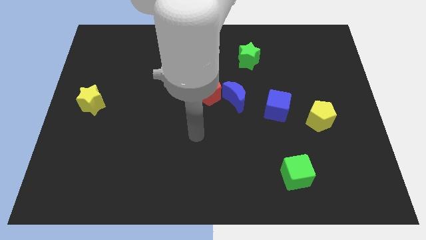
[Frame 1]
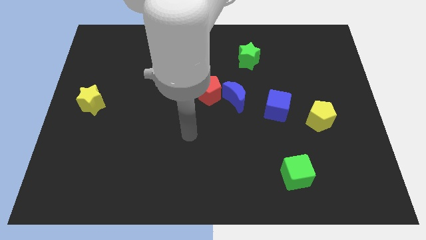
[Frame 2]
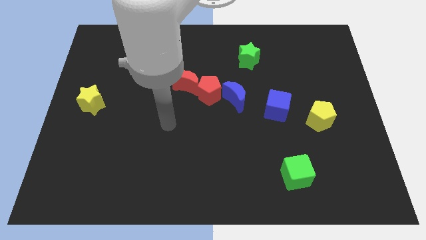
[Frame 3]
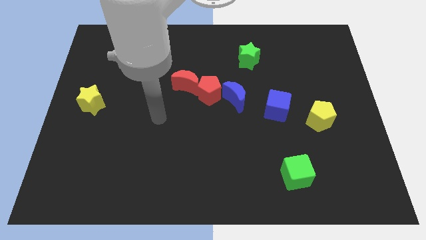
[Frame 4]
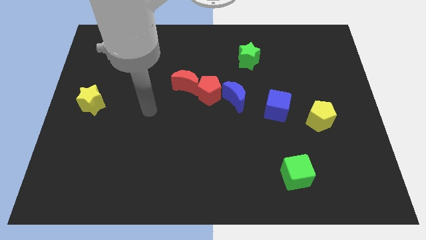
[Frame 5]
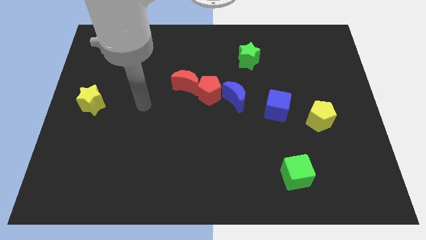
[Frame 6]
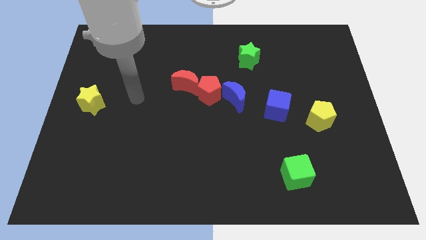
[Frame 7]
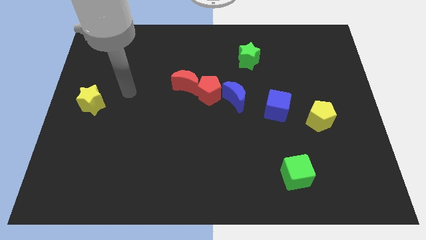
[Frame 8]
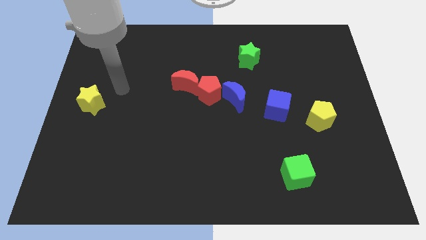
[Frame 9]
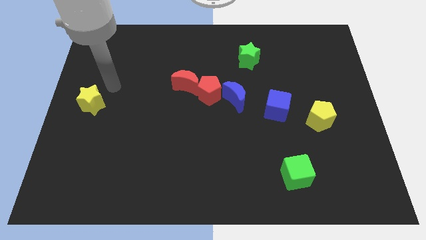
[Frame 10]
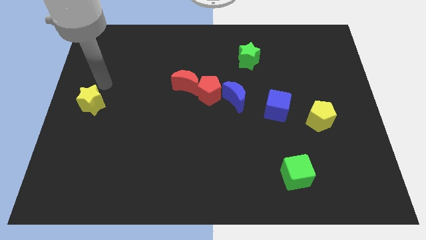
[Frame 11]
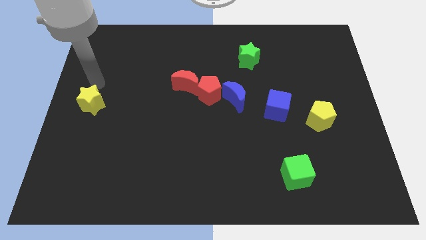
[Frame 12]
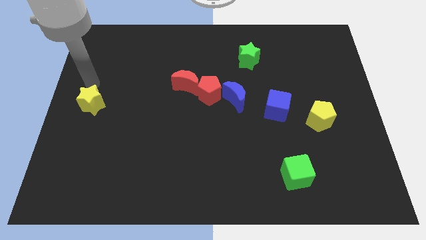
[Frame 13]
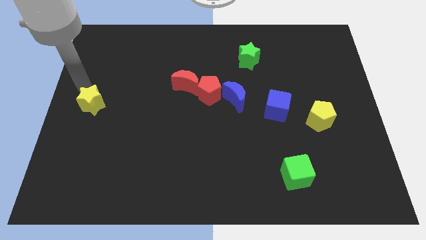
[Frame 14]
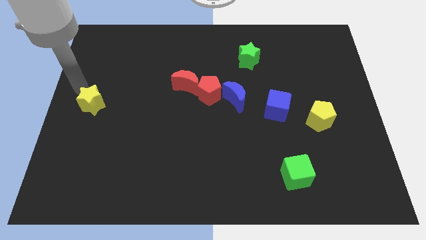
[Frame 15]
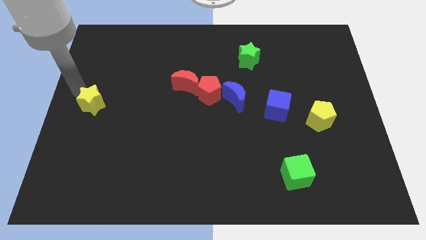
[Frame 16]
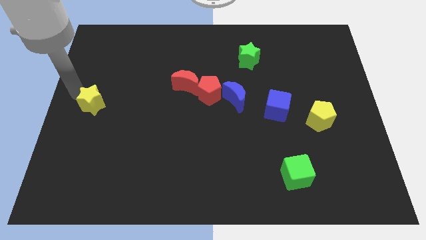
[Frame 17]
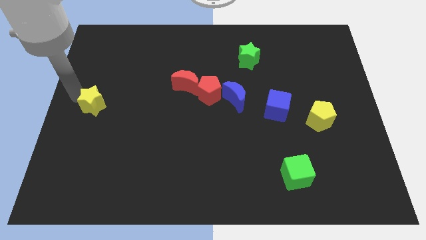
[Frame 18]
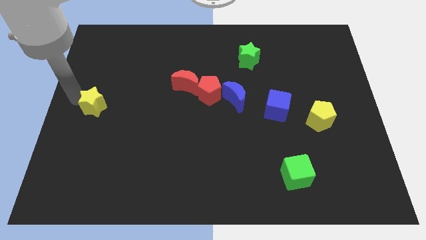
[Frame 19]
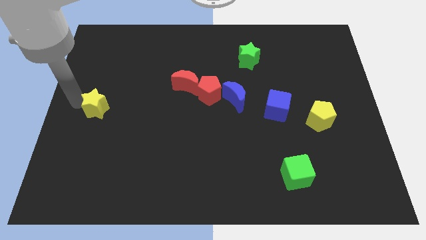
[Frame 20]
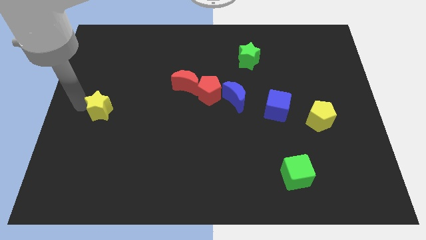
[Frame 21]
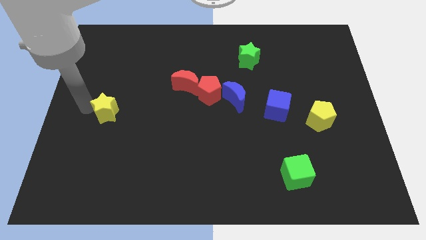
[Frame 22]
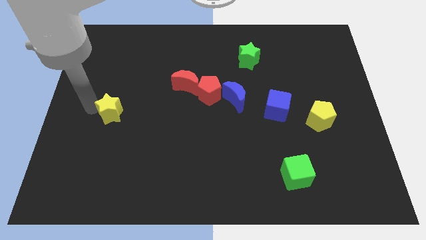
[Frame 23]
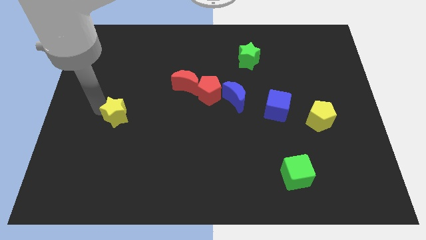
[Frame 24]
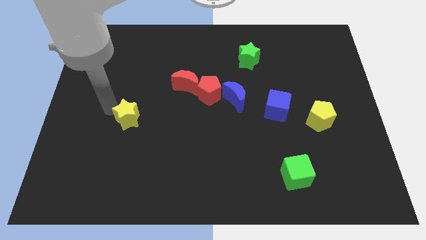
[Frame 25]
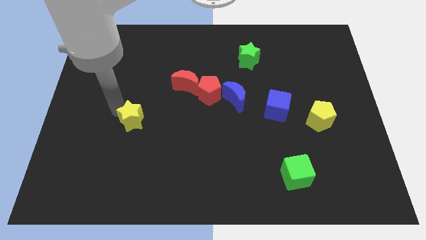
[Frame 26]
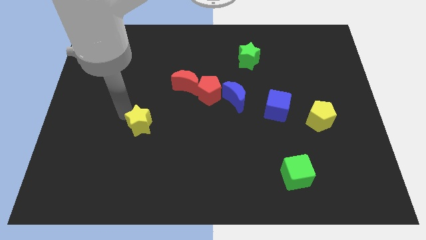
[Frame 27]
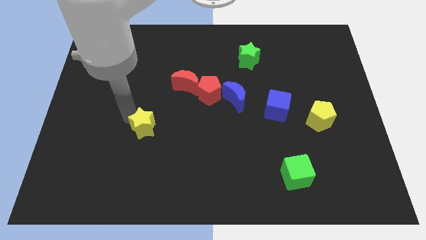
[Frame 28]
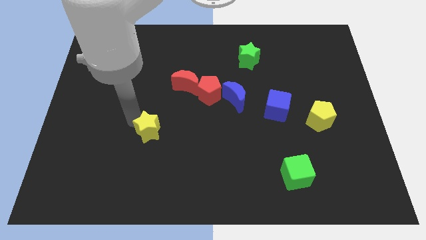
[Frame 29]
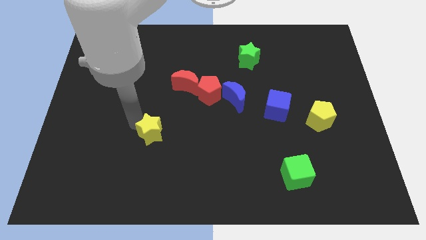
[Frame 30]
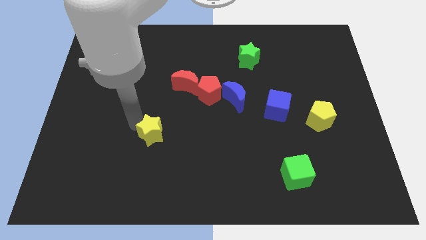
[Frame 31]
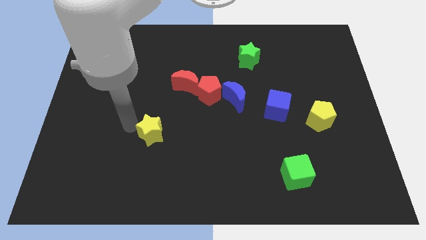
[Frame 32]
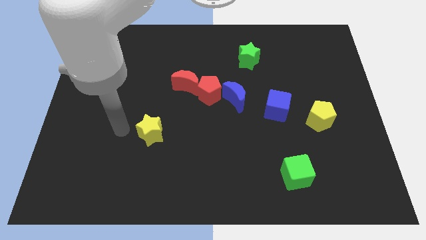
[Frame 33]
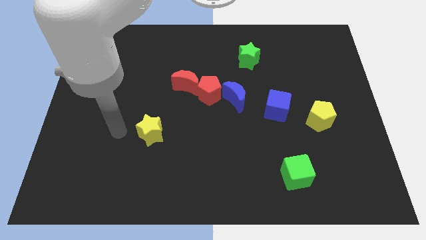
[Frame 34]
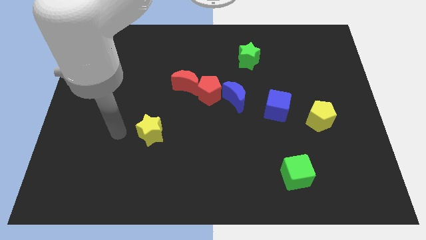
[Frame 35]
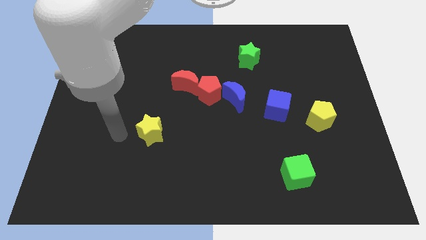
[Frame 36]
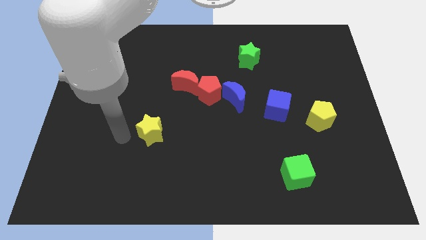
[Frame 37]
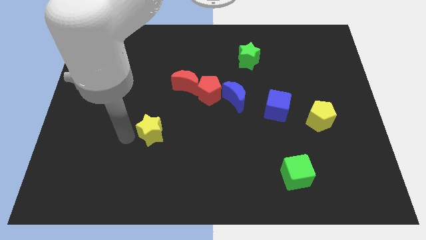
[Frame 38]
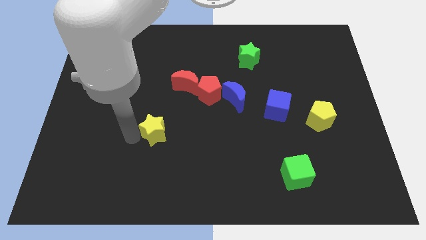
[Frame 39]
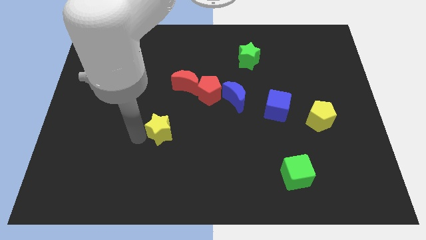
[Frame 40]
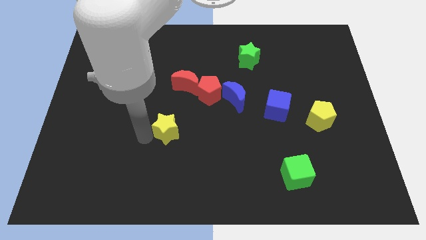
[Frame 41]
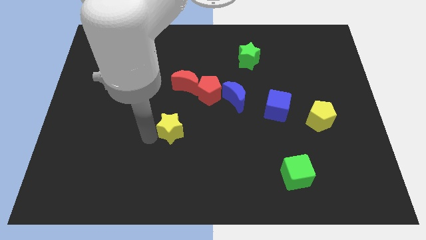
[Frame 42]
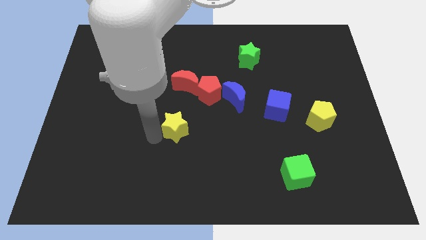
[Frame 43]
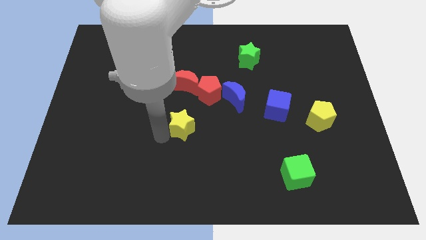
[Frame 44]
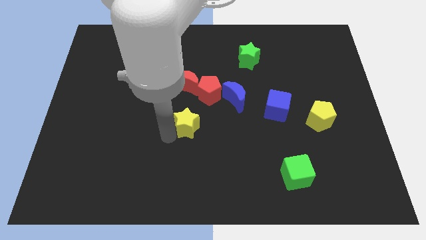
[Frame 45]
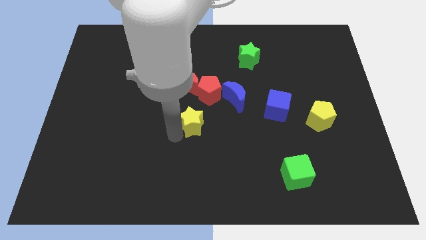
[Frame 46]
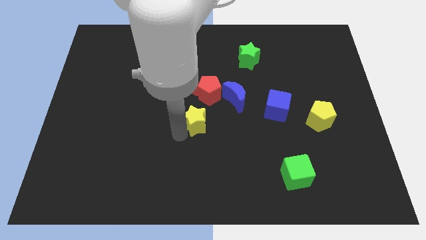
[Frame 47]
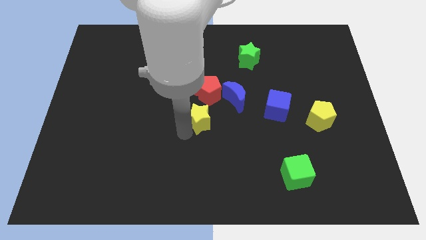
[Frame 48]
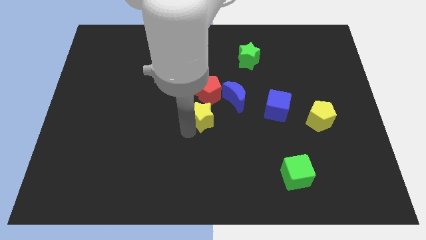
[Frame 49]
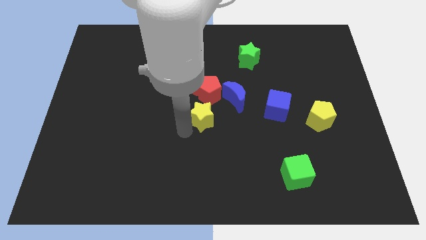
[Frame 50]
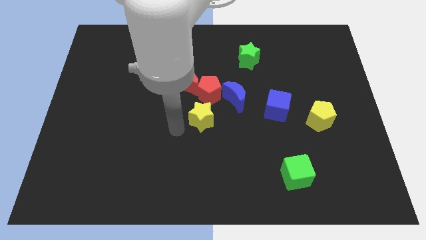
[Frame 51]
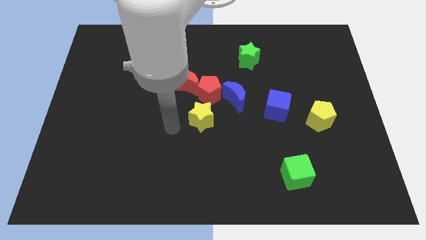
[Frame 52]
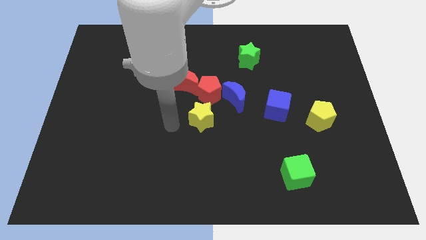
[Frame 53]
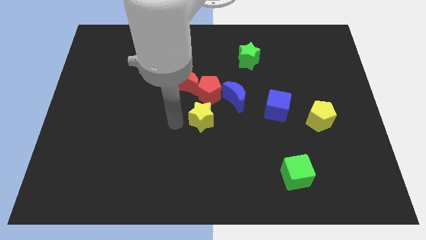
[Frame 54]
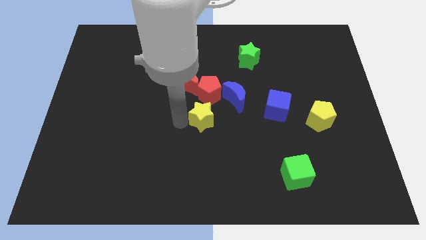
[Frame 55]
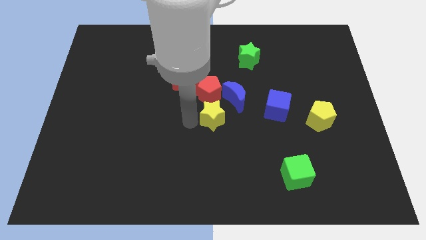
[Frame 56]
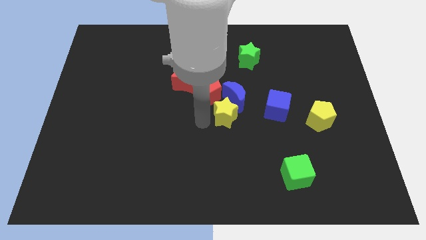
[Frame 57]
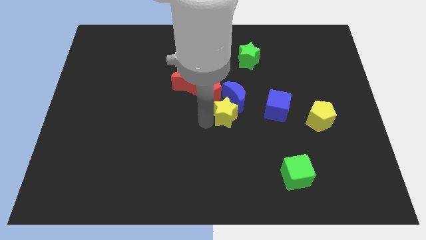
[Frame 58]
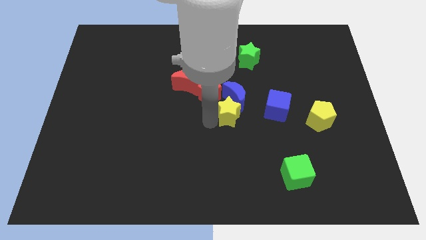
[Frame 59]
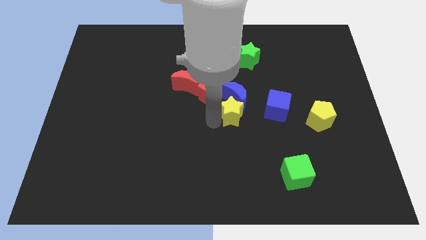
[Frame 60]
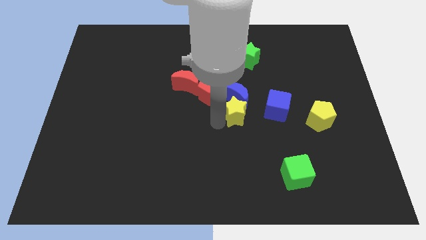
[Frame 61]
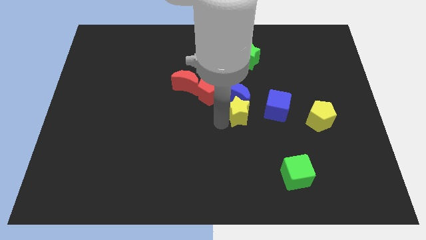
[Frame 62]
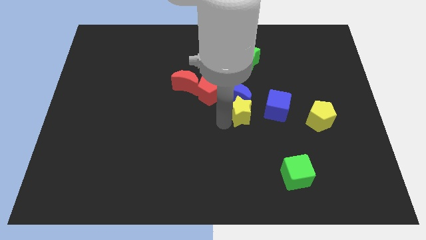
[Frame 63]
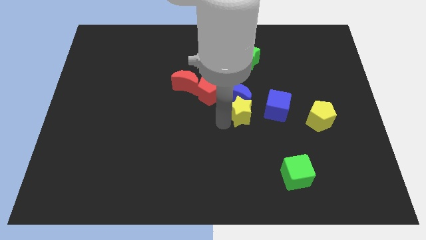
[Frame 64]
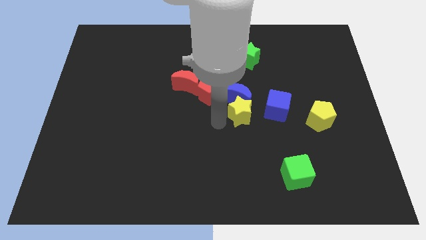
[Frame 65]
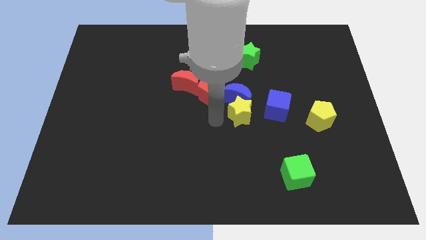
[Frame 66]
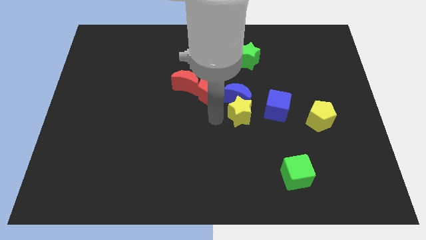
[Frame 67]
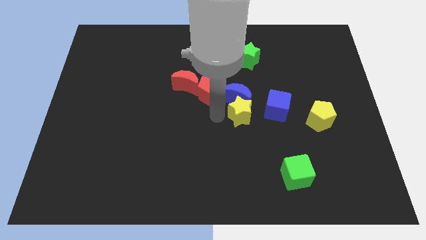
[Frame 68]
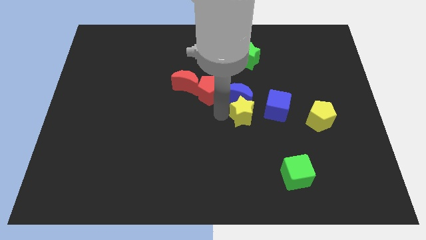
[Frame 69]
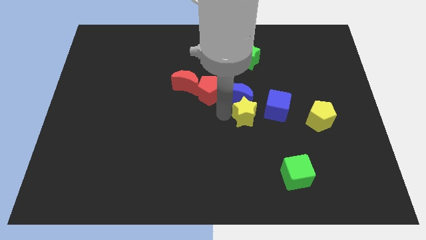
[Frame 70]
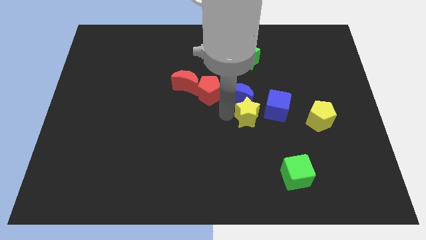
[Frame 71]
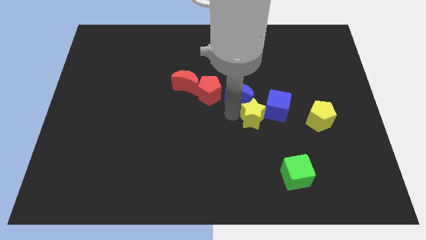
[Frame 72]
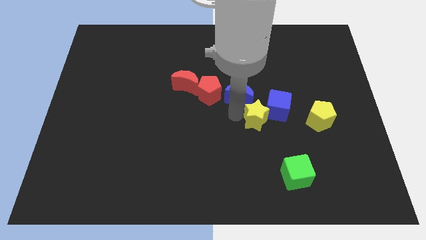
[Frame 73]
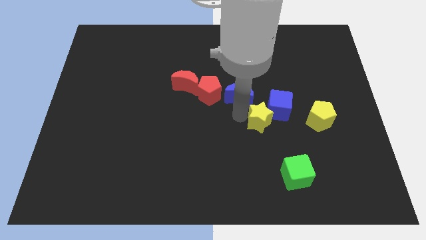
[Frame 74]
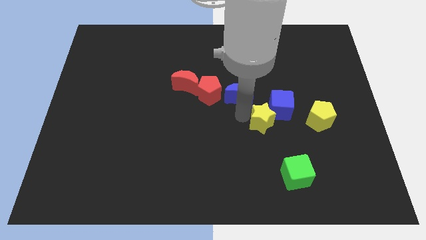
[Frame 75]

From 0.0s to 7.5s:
put the yellow star next to the blue cube

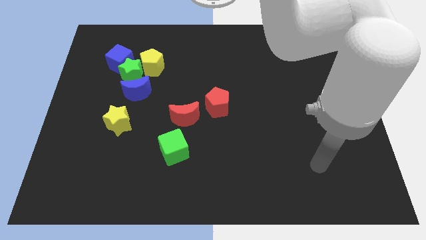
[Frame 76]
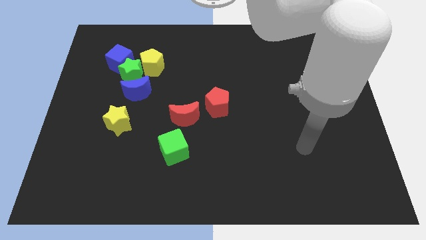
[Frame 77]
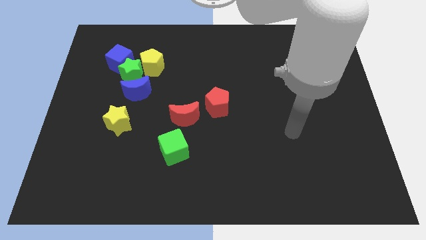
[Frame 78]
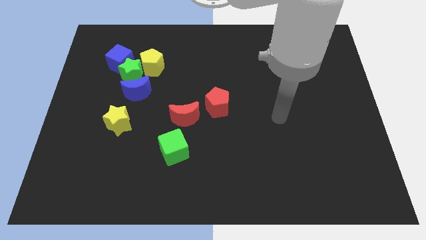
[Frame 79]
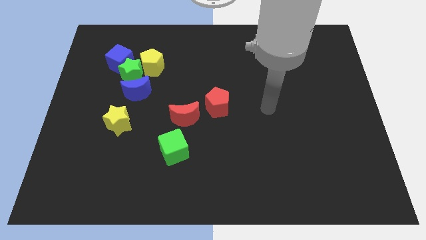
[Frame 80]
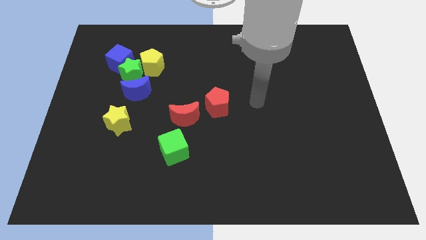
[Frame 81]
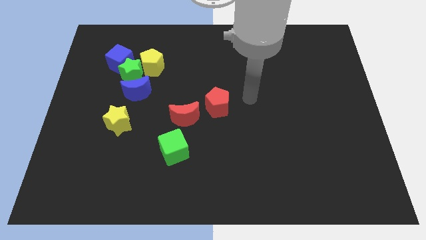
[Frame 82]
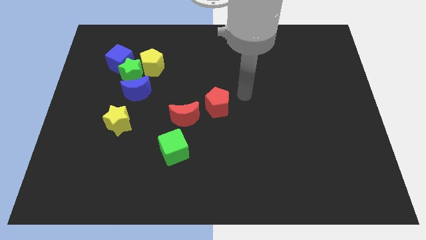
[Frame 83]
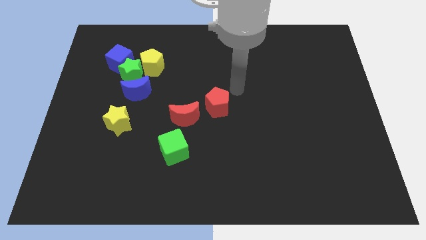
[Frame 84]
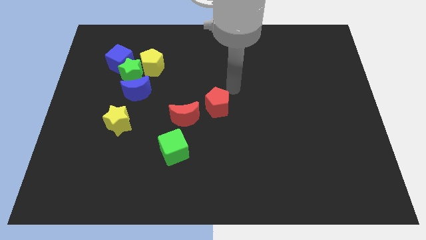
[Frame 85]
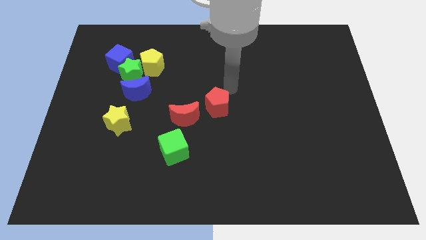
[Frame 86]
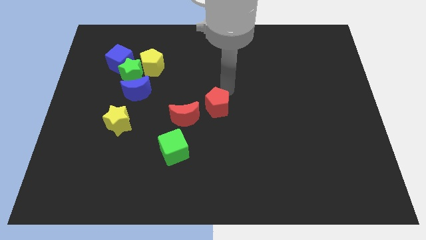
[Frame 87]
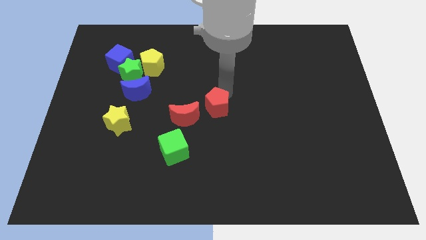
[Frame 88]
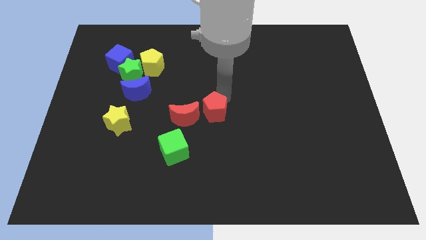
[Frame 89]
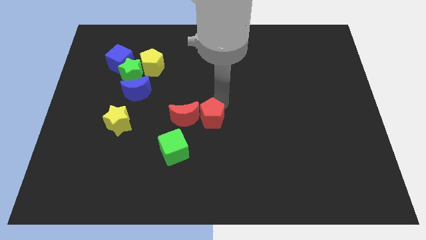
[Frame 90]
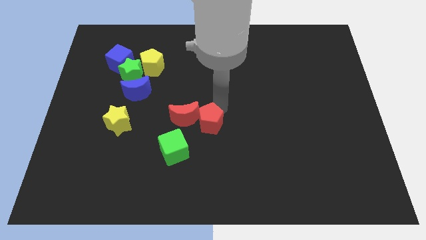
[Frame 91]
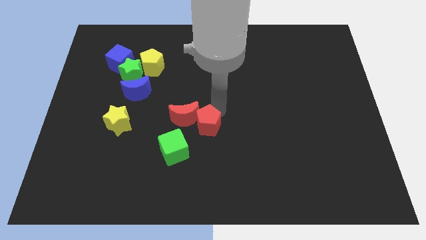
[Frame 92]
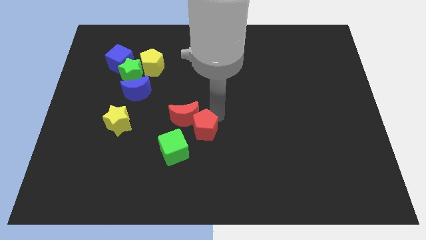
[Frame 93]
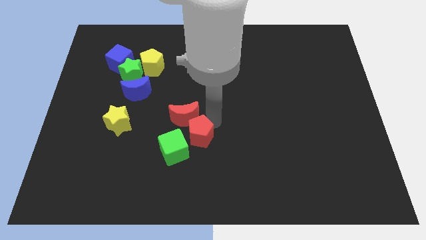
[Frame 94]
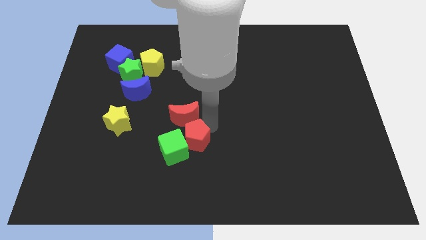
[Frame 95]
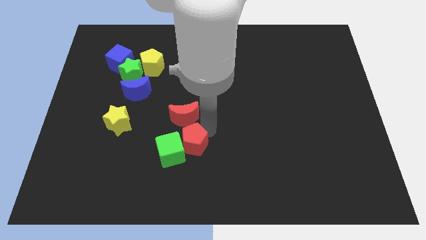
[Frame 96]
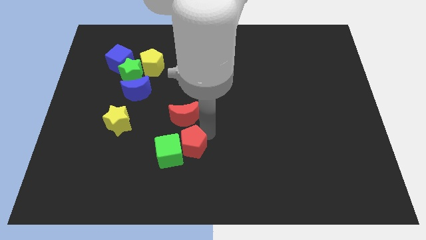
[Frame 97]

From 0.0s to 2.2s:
slide the red pentagon to the green cube
